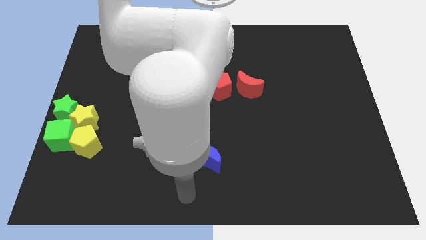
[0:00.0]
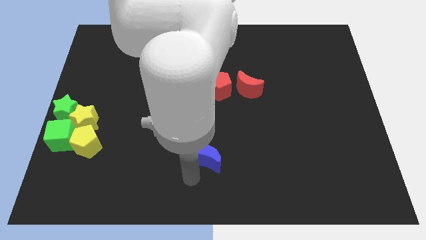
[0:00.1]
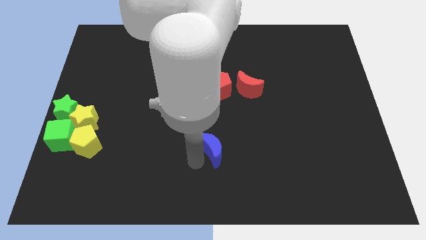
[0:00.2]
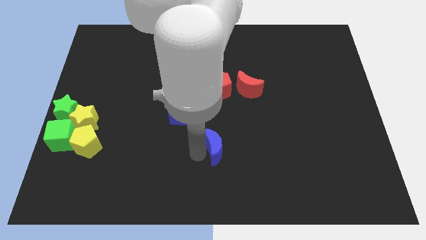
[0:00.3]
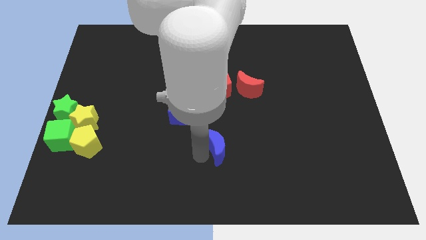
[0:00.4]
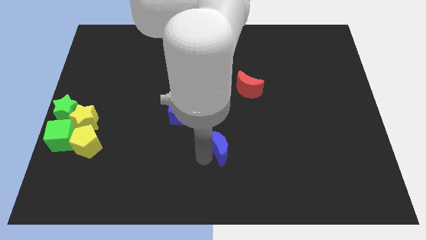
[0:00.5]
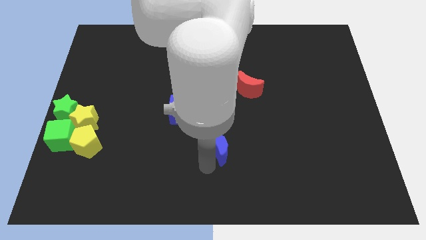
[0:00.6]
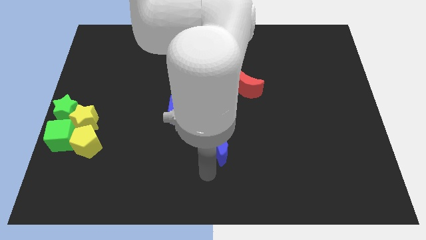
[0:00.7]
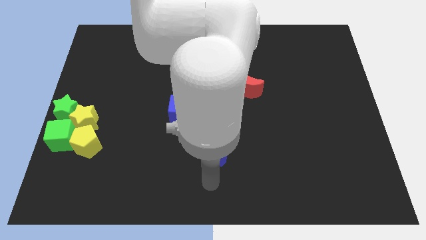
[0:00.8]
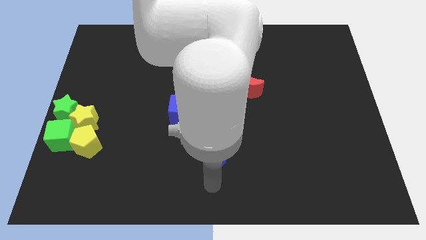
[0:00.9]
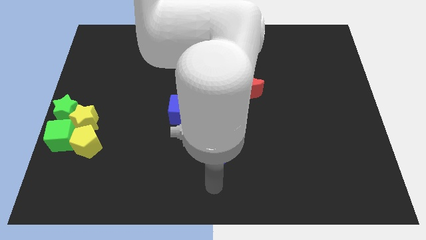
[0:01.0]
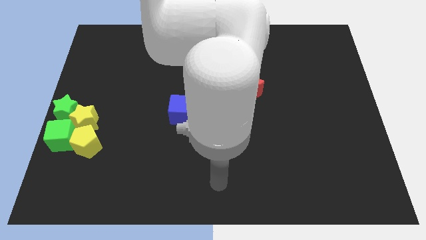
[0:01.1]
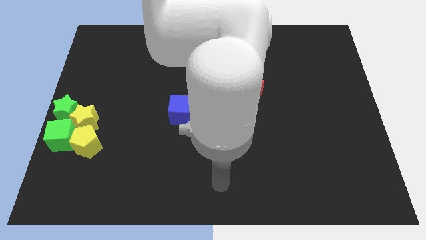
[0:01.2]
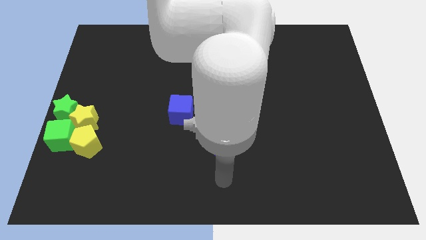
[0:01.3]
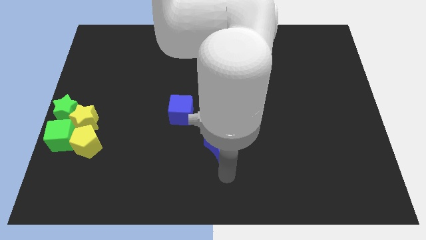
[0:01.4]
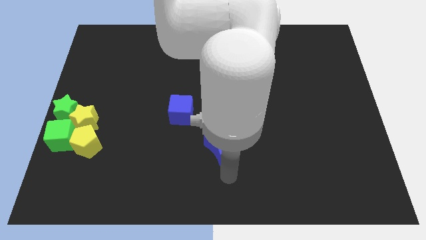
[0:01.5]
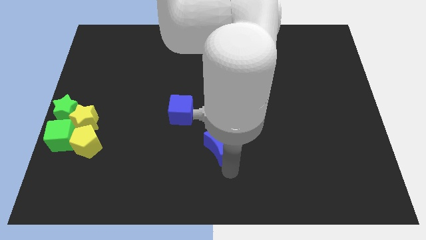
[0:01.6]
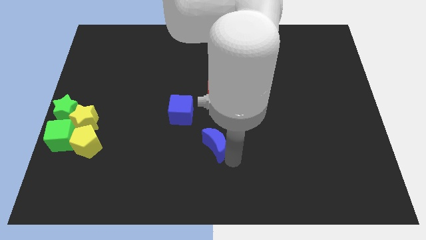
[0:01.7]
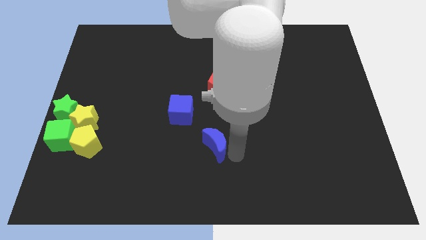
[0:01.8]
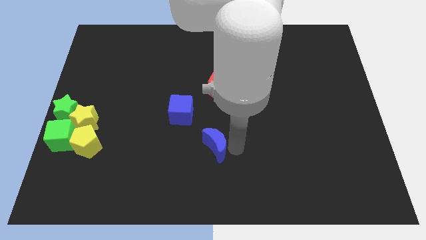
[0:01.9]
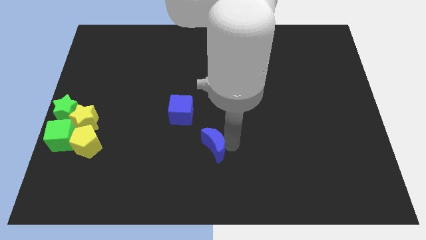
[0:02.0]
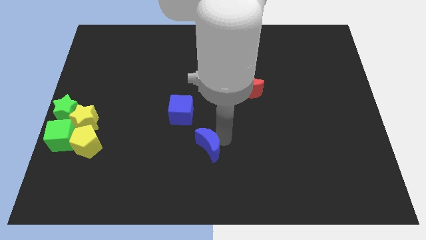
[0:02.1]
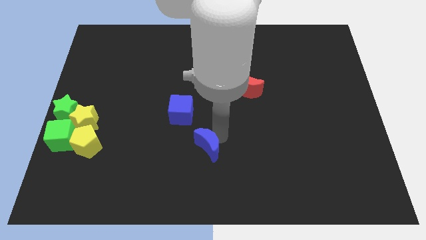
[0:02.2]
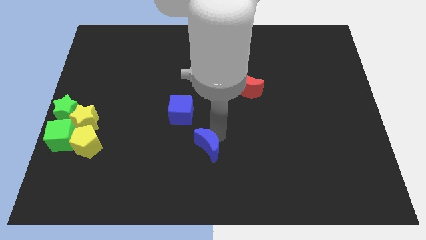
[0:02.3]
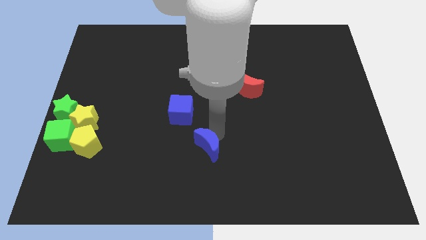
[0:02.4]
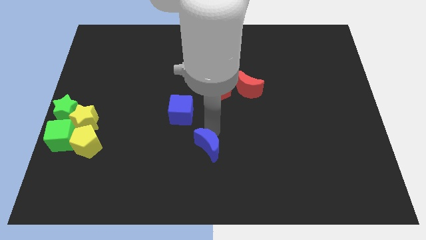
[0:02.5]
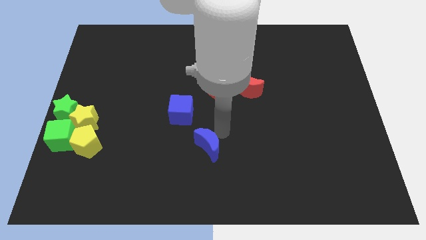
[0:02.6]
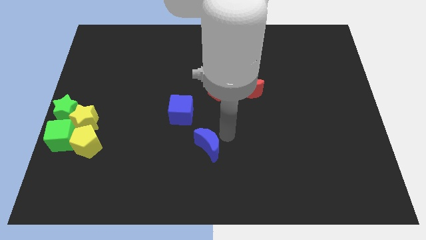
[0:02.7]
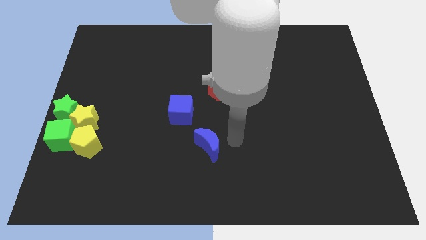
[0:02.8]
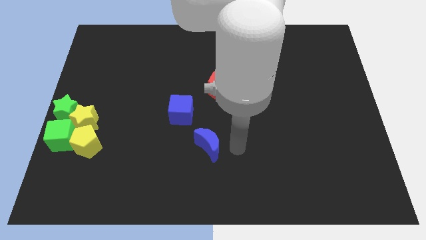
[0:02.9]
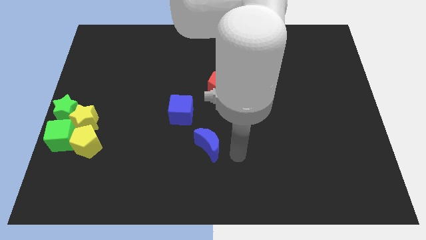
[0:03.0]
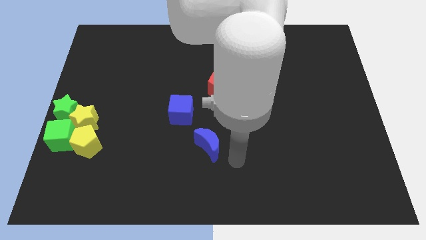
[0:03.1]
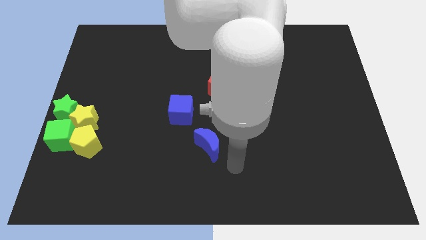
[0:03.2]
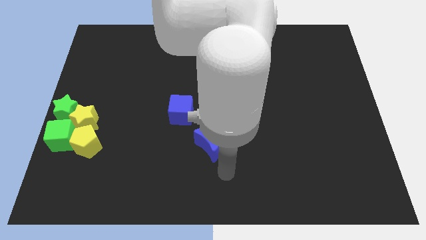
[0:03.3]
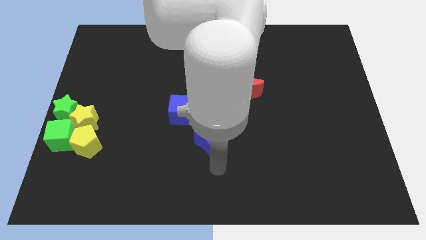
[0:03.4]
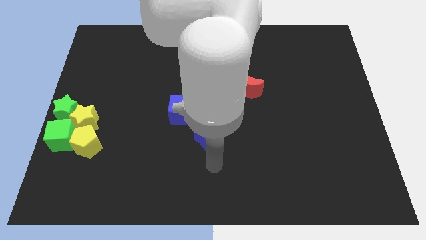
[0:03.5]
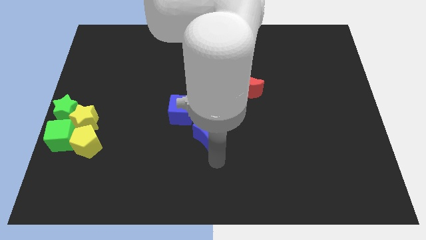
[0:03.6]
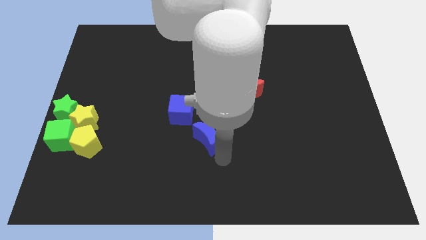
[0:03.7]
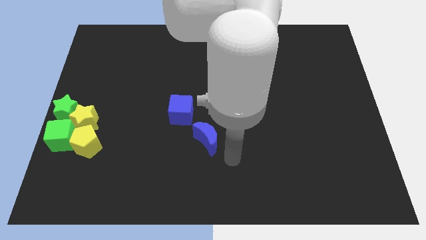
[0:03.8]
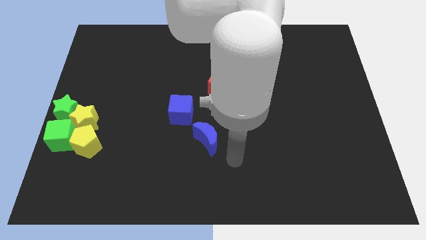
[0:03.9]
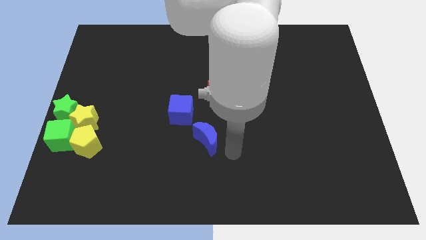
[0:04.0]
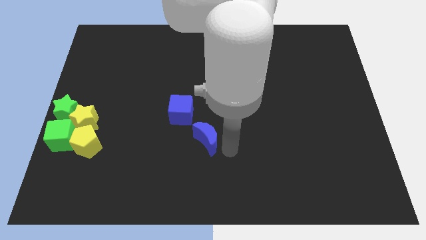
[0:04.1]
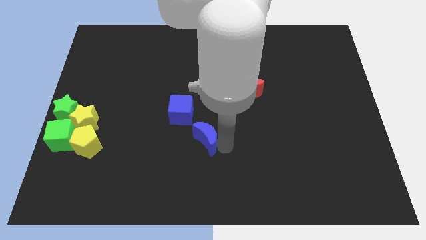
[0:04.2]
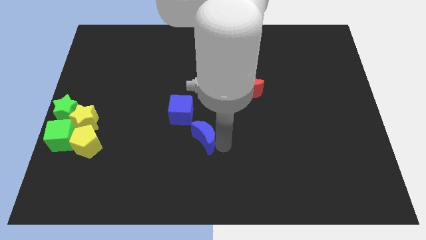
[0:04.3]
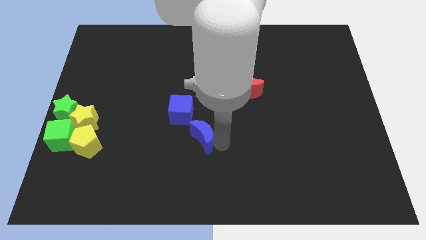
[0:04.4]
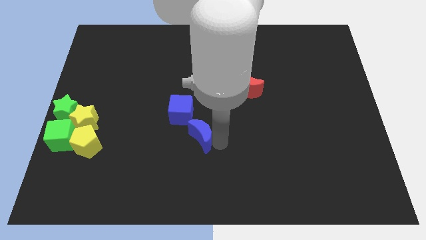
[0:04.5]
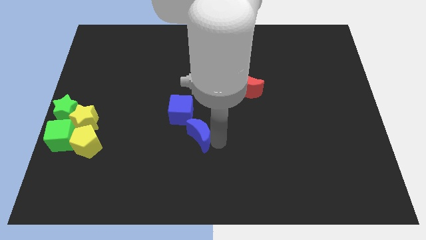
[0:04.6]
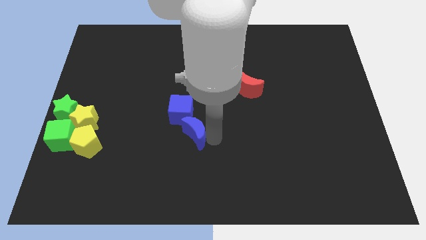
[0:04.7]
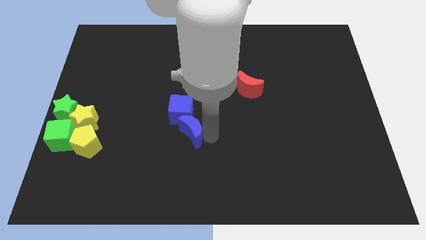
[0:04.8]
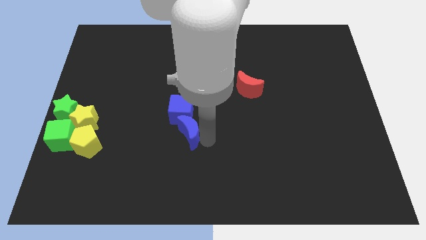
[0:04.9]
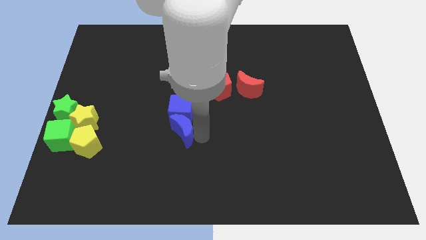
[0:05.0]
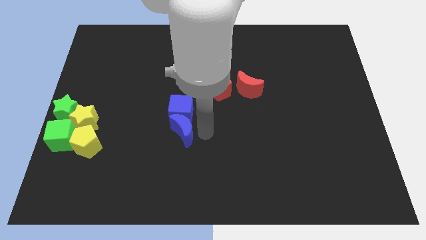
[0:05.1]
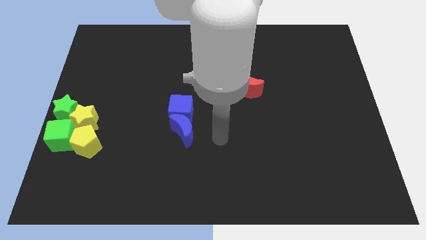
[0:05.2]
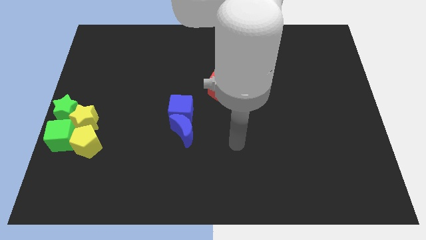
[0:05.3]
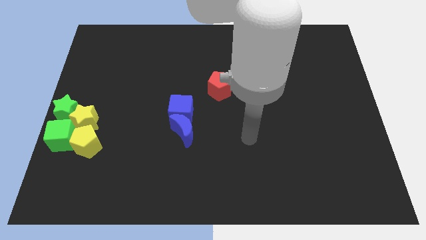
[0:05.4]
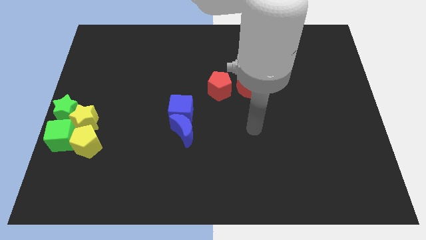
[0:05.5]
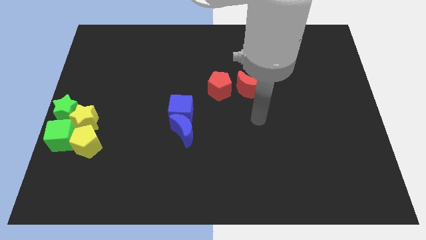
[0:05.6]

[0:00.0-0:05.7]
put the blue moon vertically below the blue cube

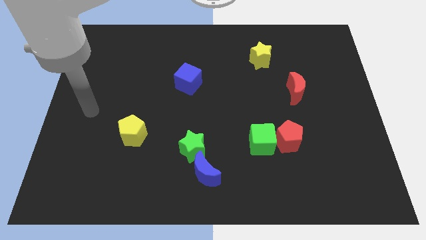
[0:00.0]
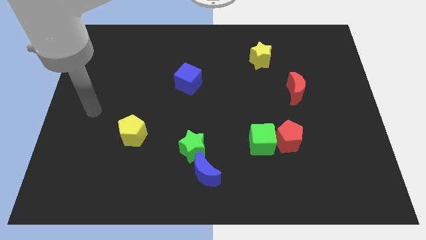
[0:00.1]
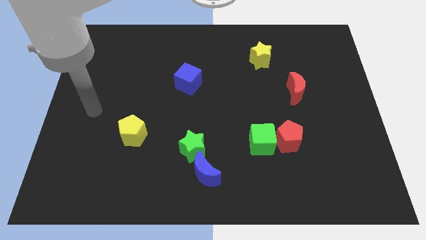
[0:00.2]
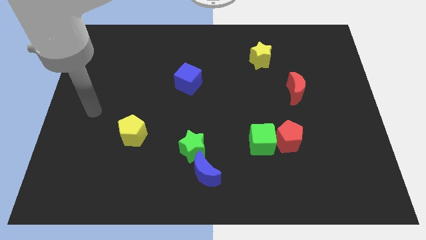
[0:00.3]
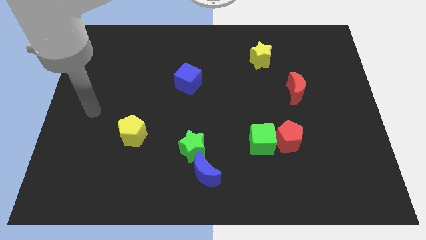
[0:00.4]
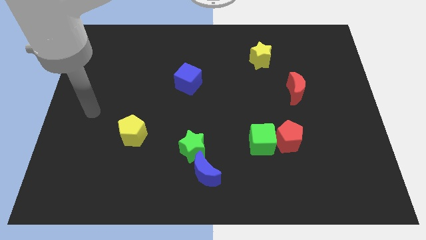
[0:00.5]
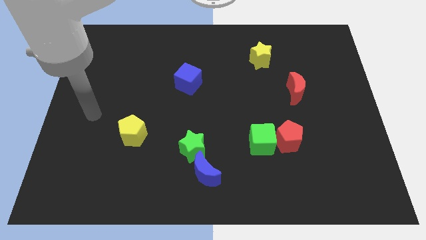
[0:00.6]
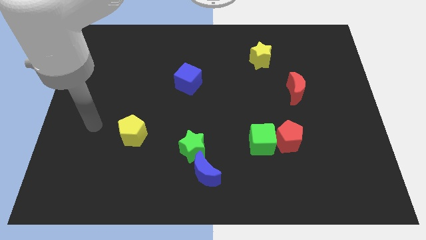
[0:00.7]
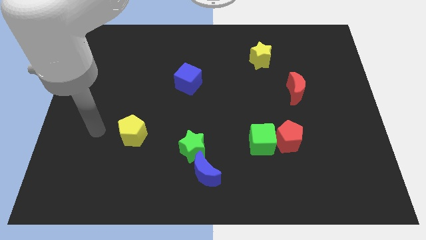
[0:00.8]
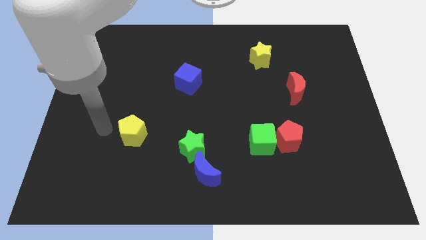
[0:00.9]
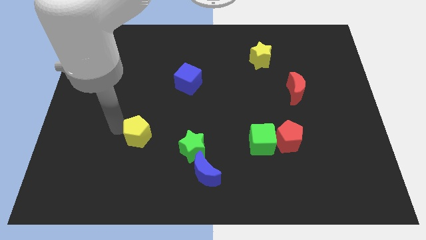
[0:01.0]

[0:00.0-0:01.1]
touch the yellow pentagon slightly

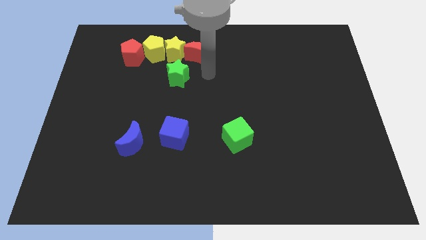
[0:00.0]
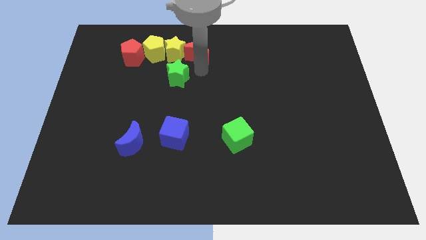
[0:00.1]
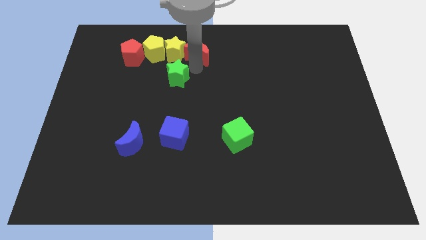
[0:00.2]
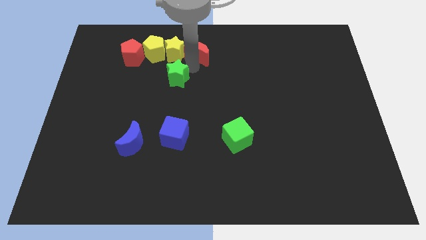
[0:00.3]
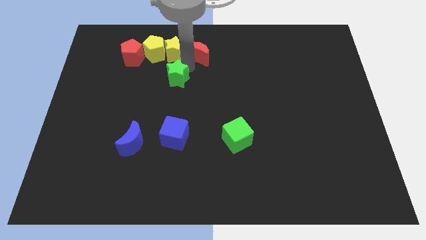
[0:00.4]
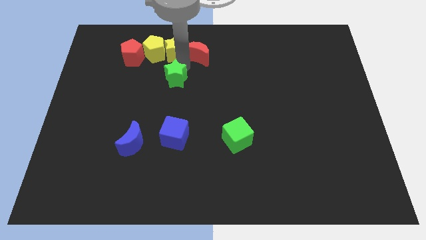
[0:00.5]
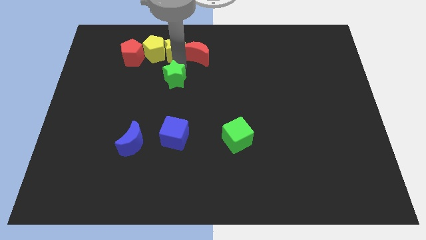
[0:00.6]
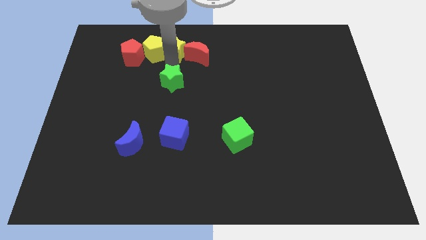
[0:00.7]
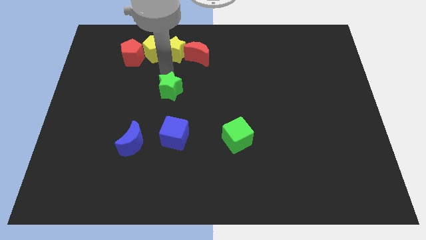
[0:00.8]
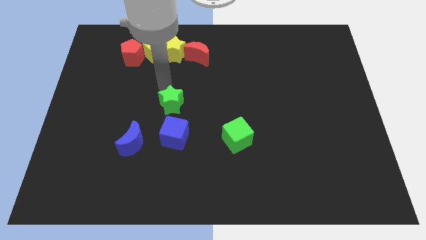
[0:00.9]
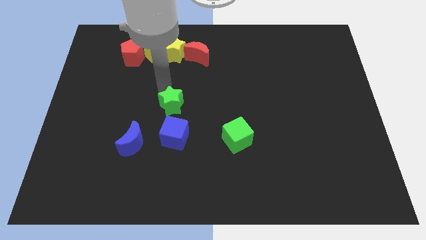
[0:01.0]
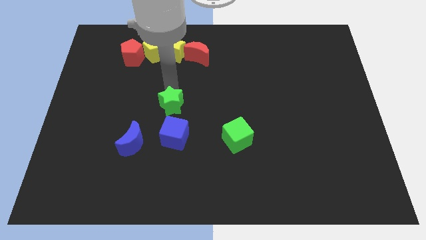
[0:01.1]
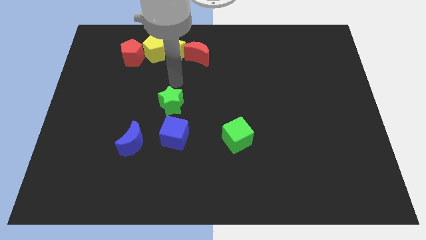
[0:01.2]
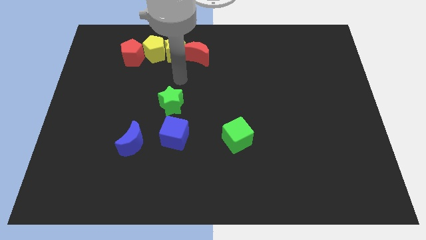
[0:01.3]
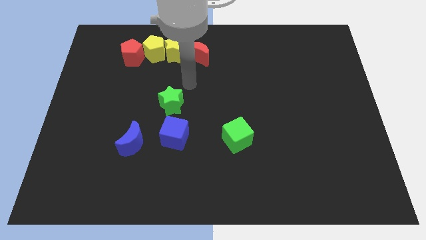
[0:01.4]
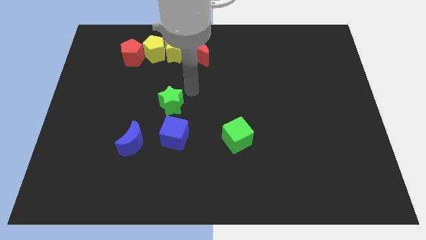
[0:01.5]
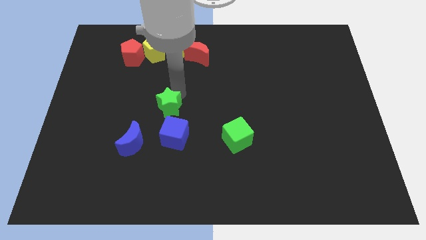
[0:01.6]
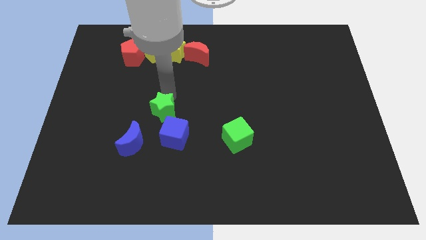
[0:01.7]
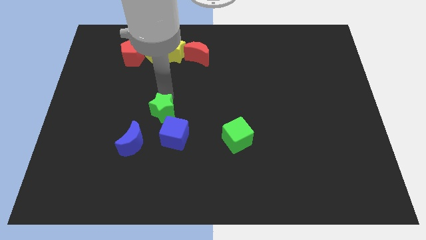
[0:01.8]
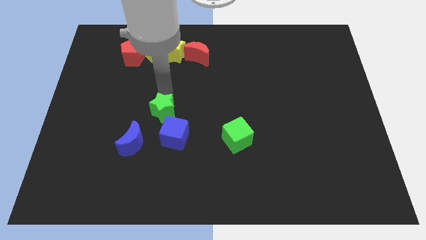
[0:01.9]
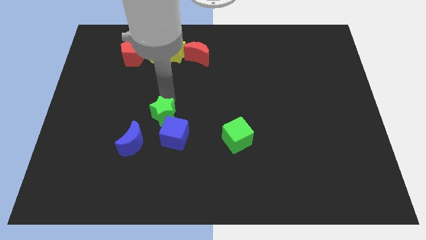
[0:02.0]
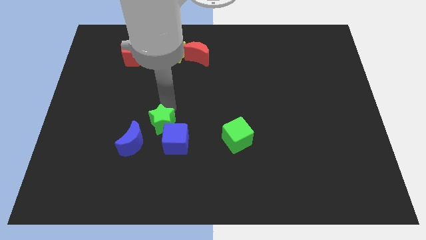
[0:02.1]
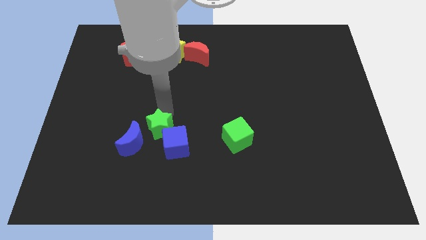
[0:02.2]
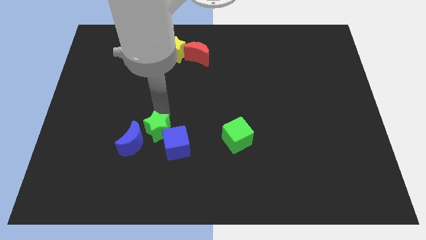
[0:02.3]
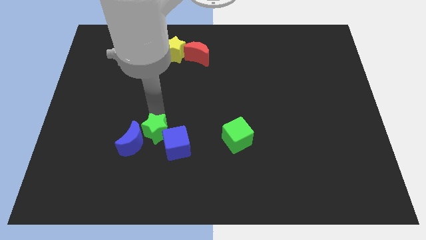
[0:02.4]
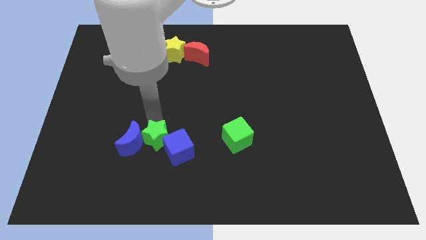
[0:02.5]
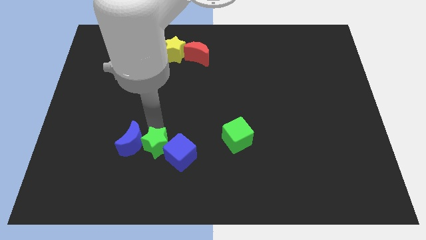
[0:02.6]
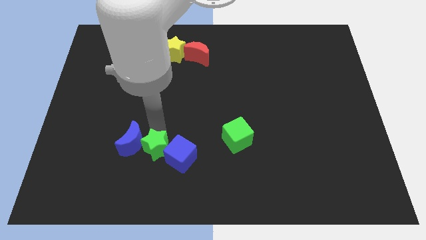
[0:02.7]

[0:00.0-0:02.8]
move the green star between blue blocks
